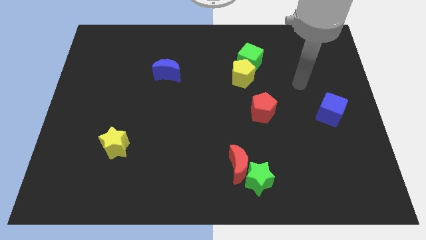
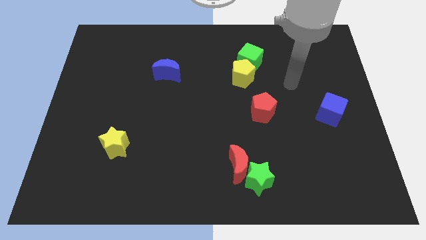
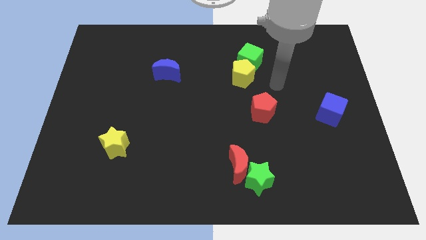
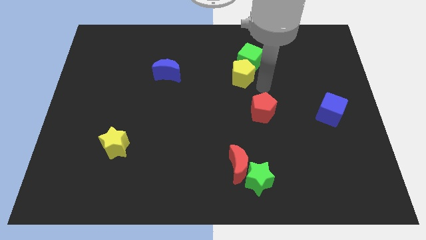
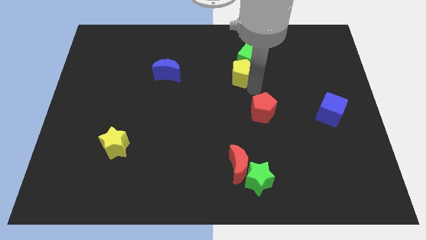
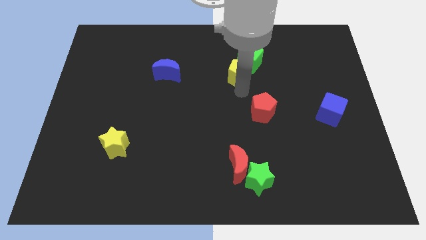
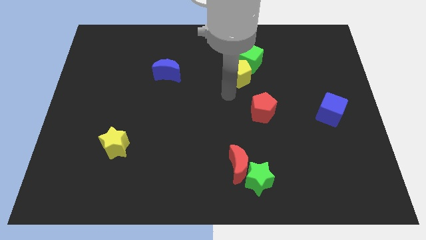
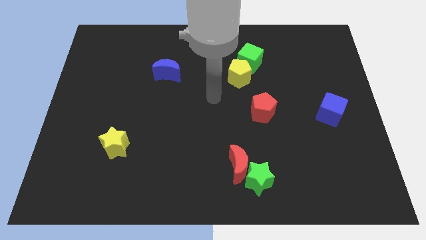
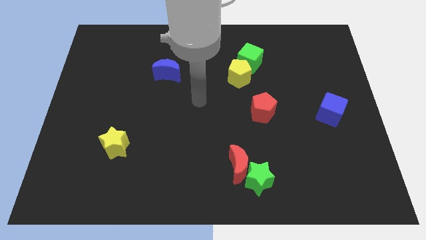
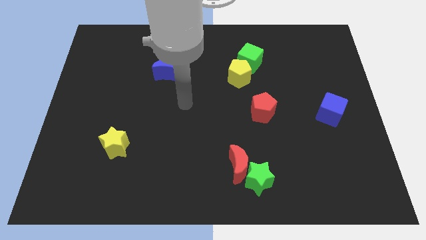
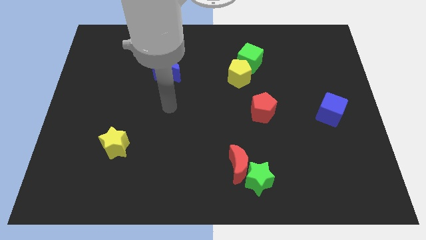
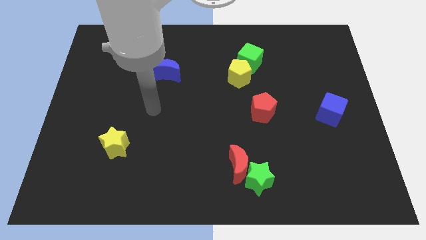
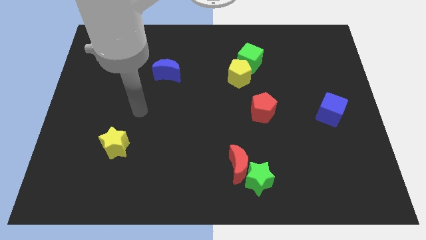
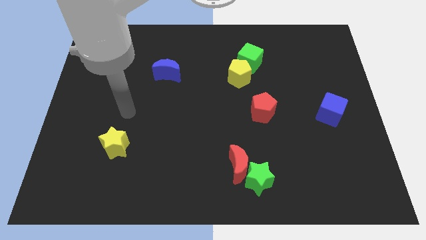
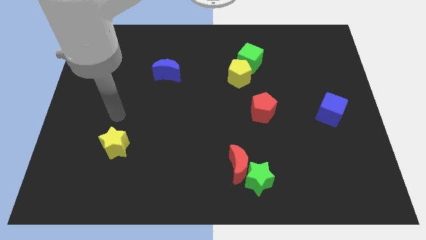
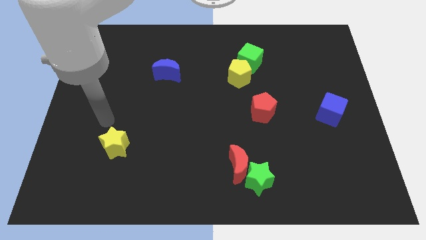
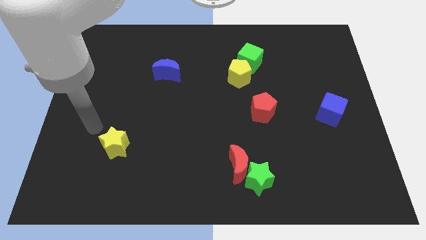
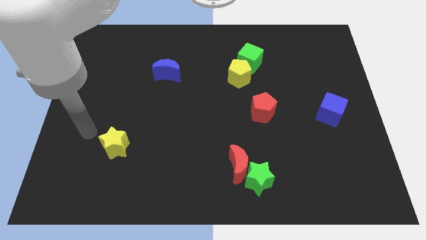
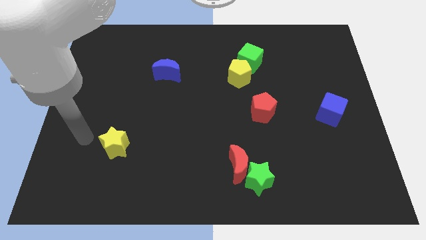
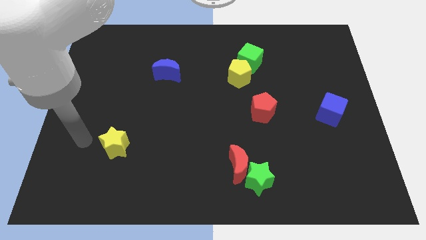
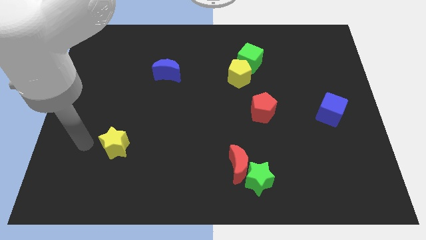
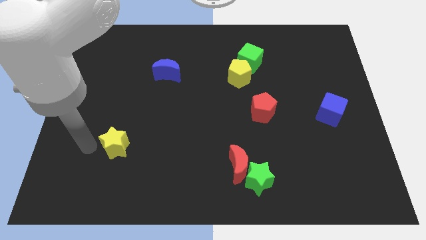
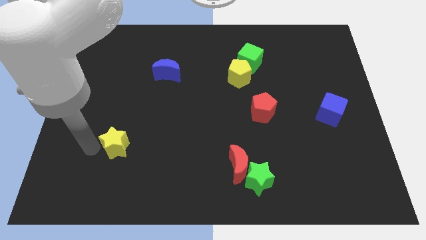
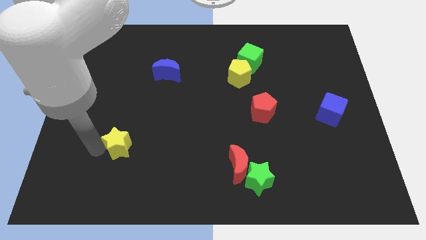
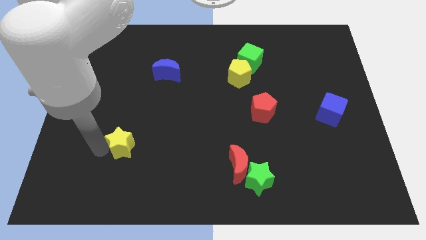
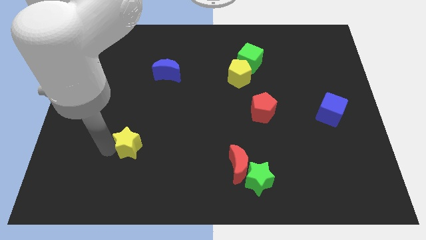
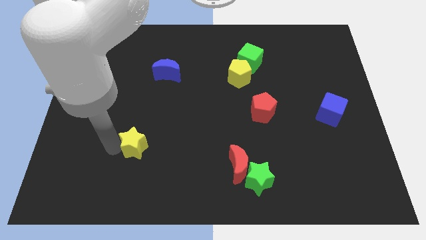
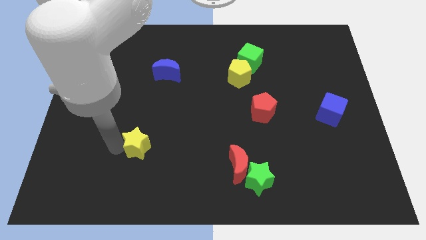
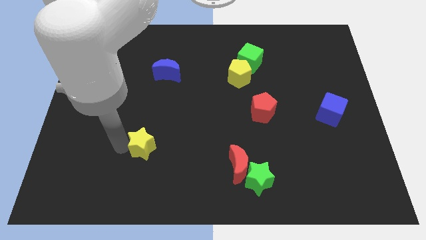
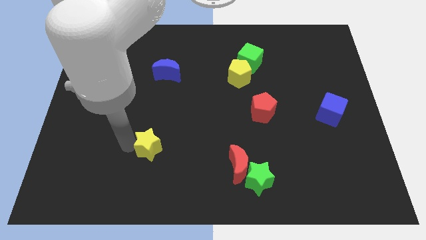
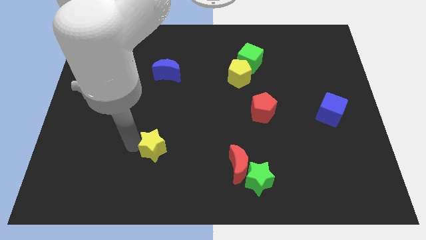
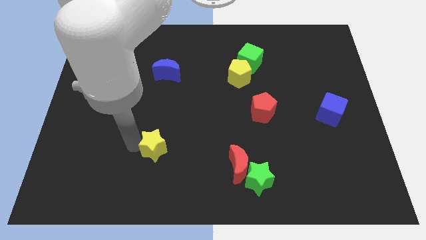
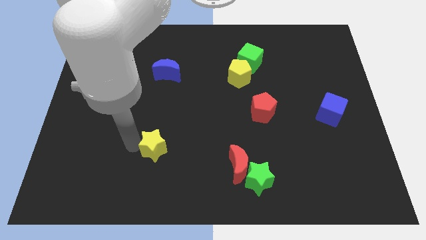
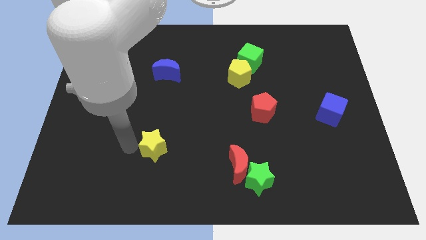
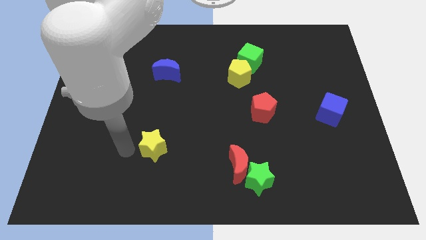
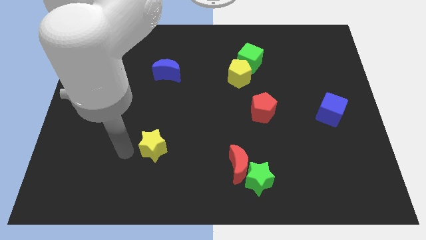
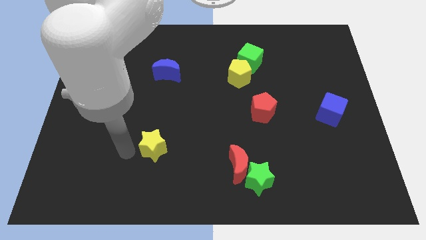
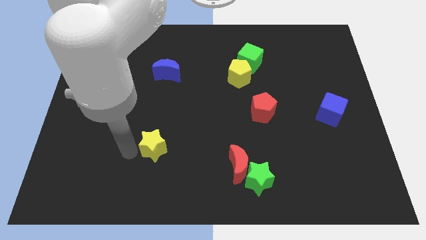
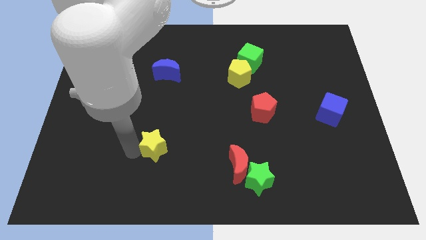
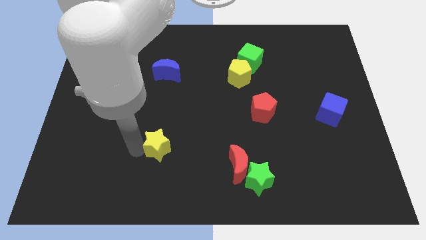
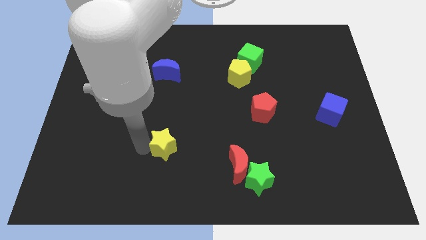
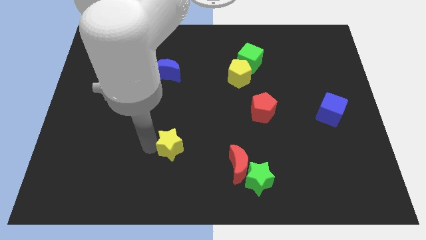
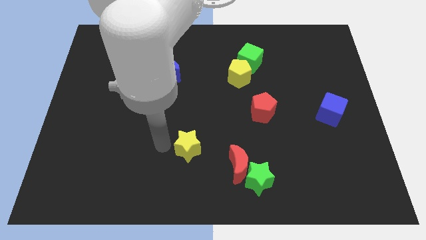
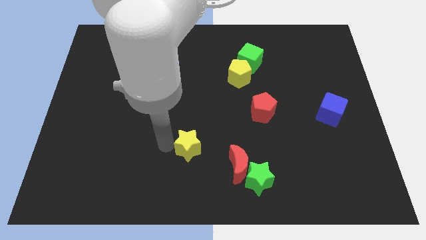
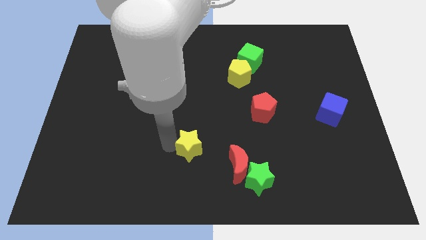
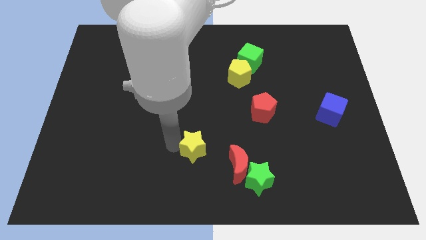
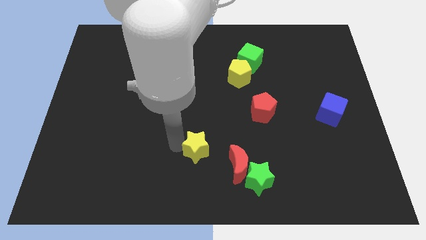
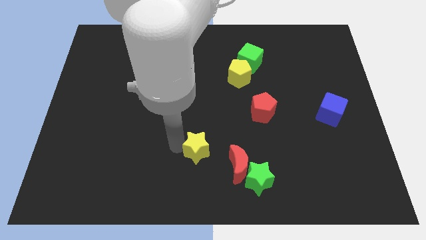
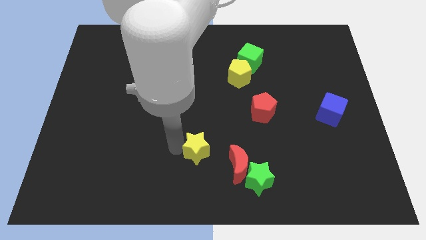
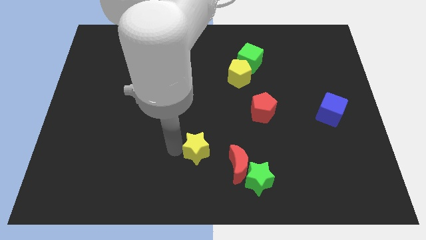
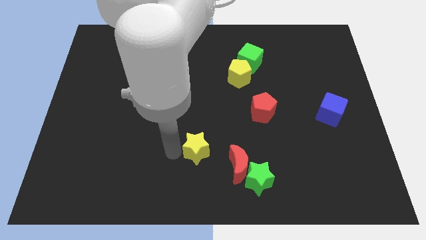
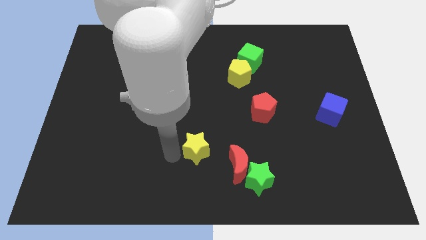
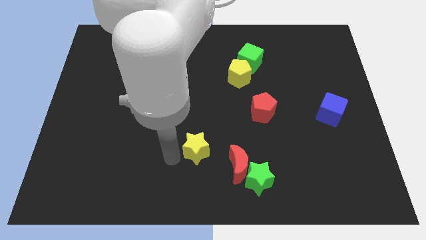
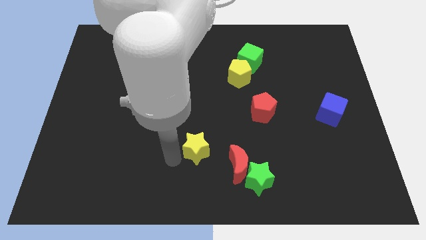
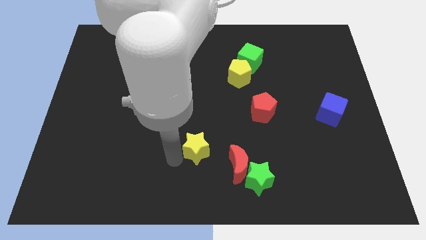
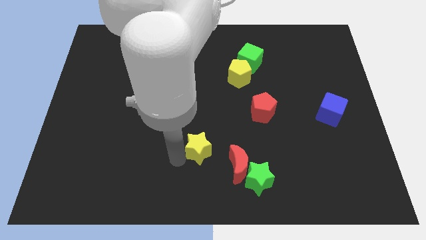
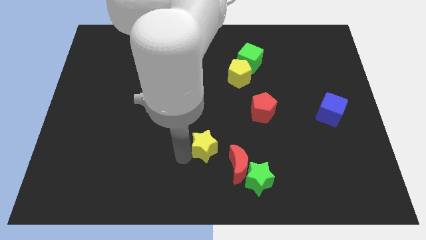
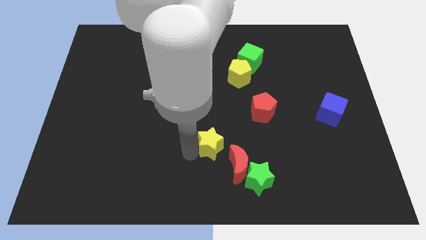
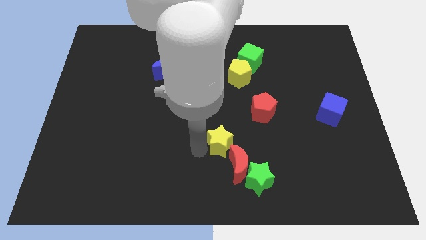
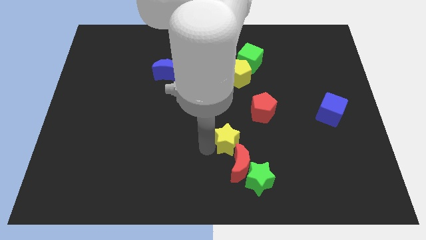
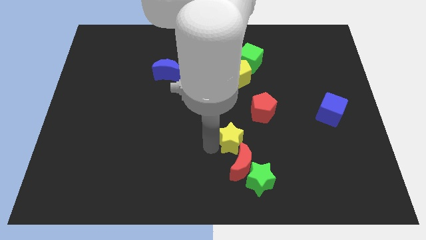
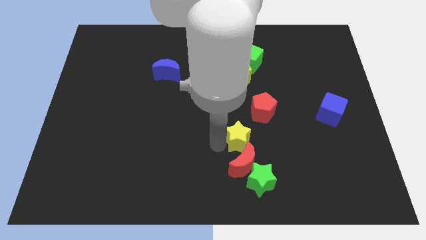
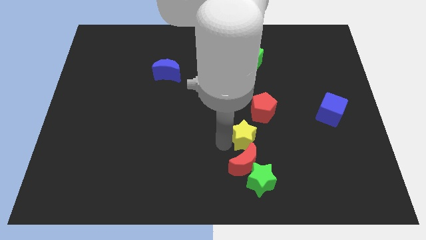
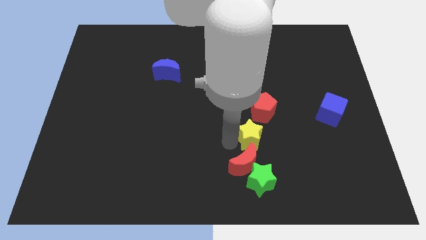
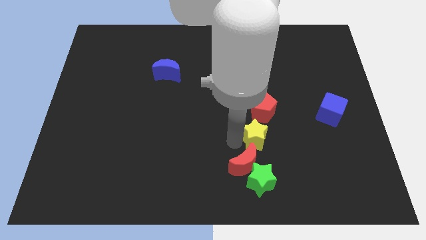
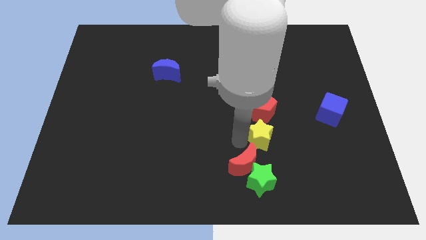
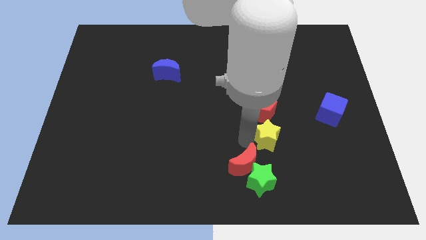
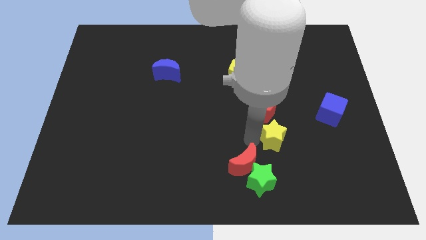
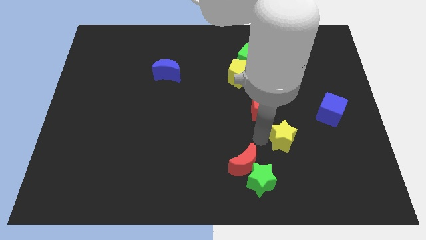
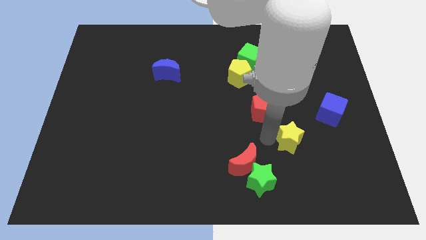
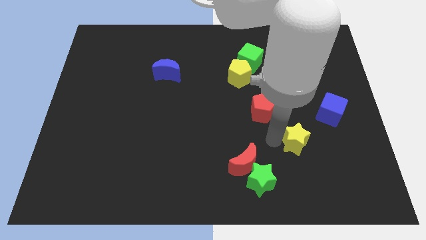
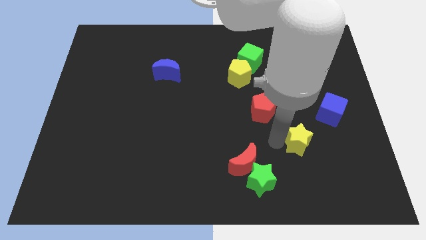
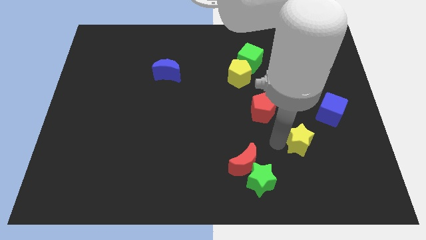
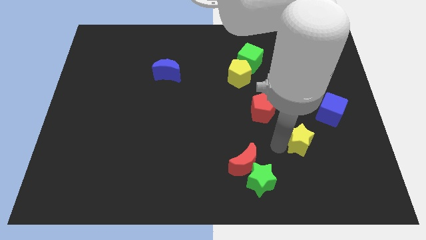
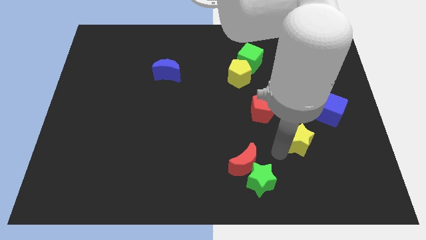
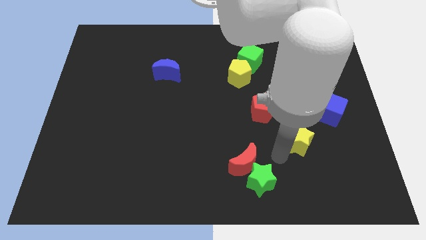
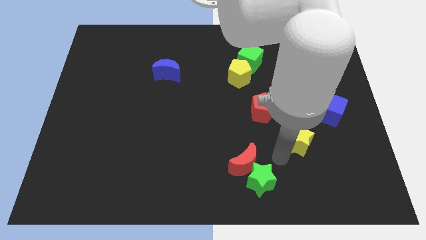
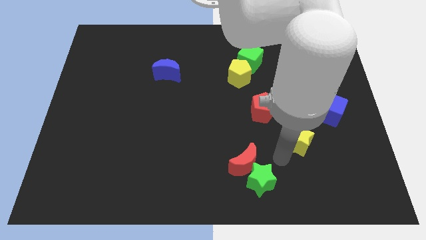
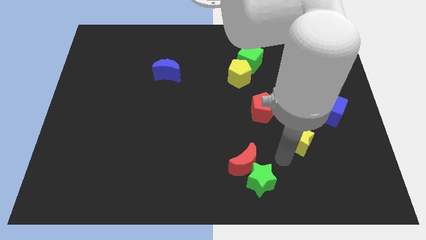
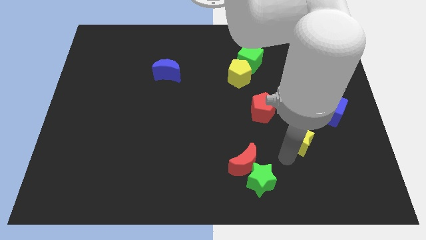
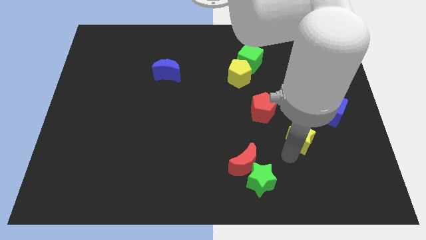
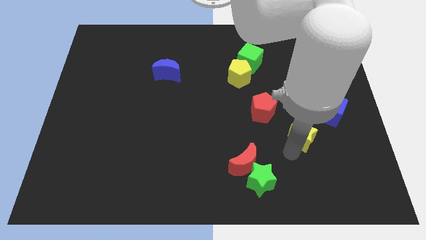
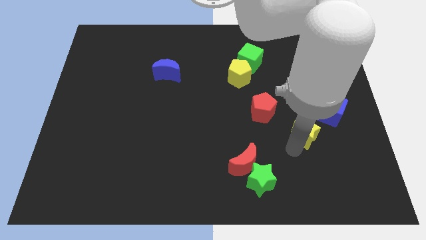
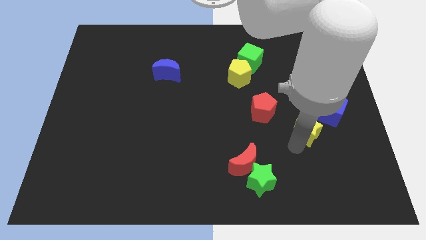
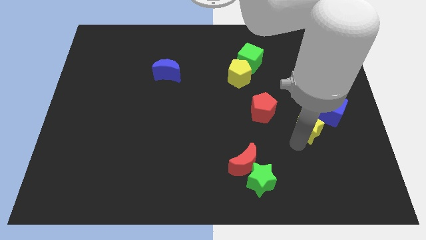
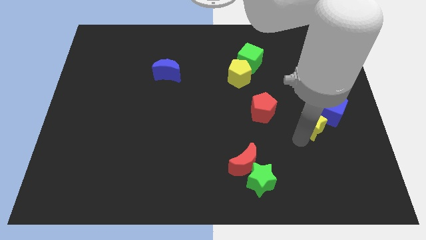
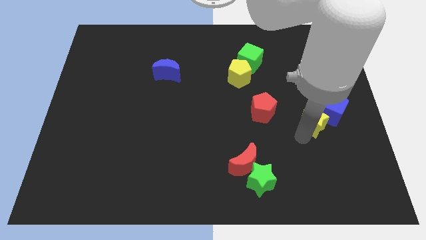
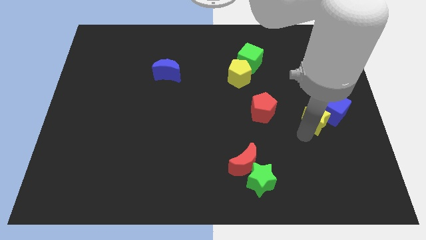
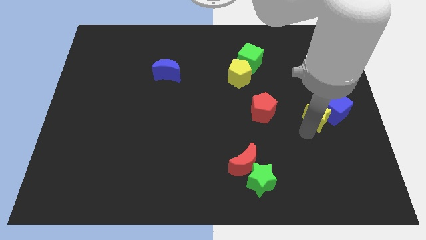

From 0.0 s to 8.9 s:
put the yellow star close to the blue cube

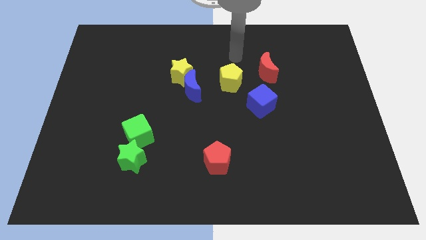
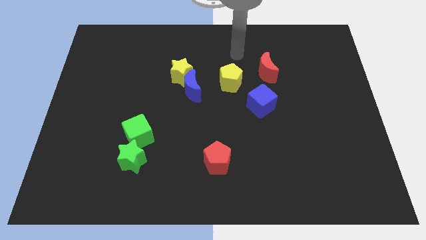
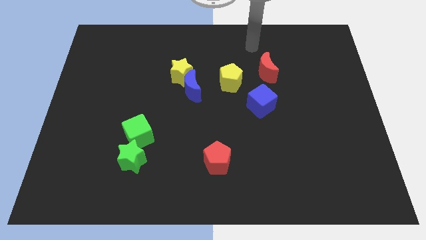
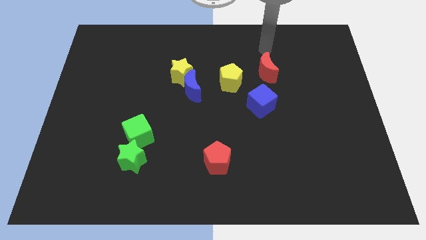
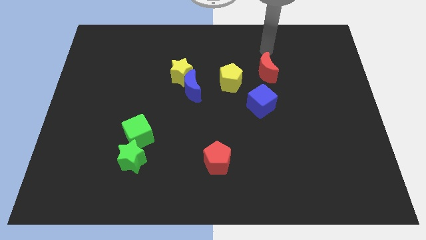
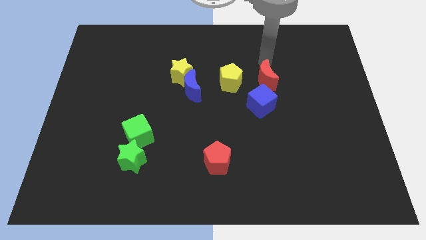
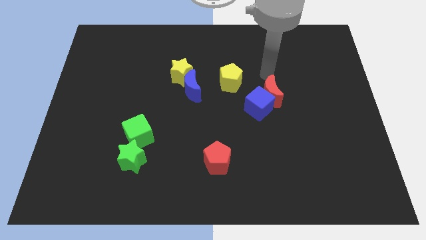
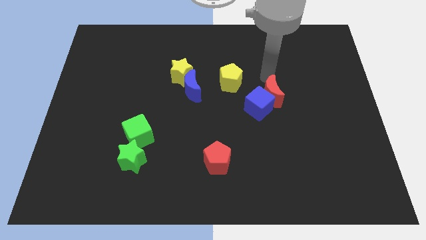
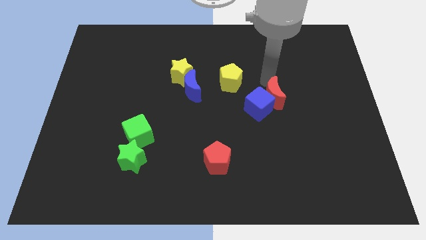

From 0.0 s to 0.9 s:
move the red moon to the blue cube
